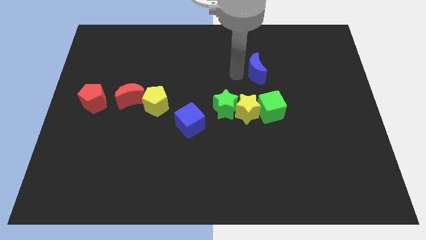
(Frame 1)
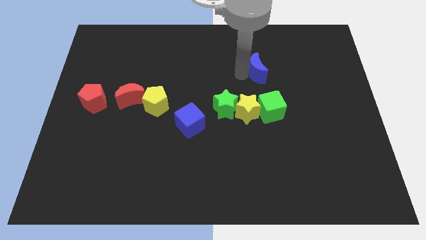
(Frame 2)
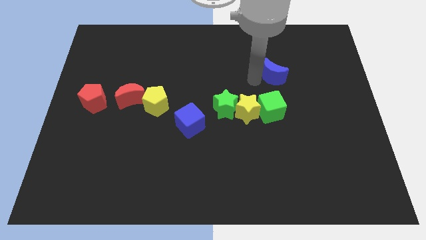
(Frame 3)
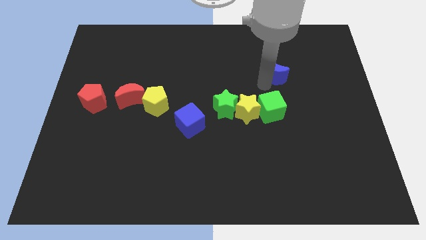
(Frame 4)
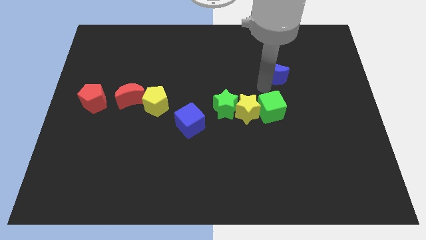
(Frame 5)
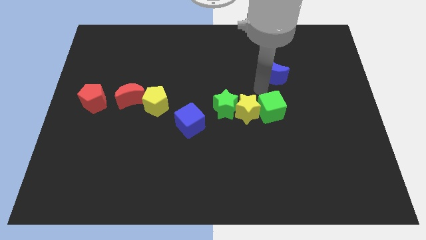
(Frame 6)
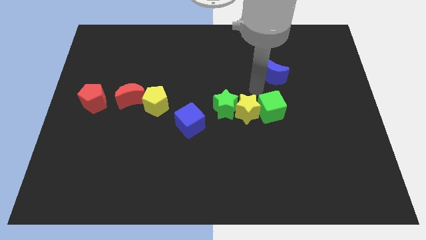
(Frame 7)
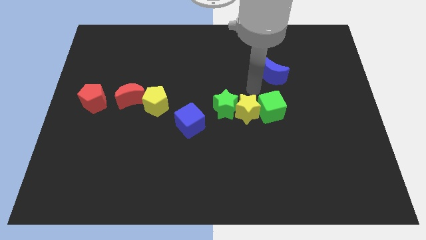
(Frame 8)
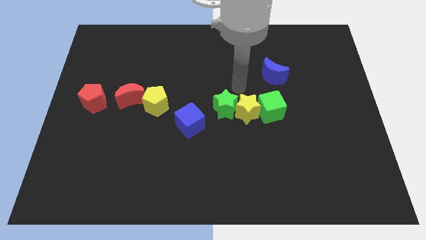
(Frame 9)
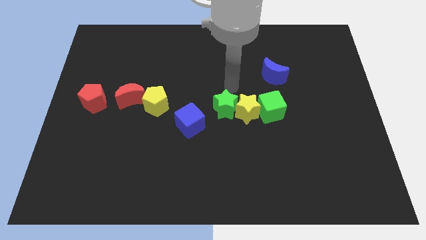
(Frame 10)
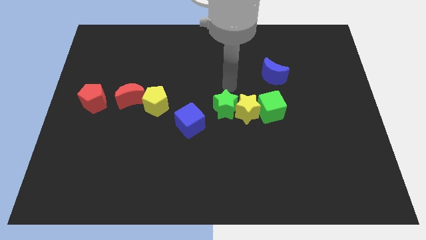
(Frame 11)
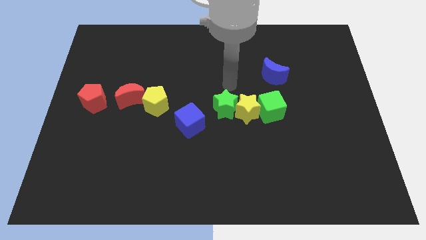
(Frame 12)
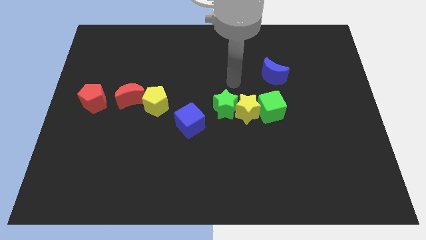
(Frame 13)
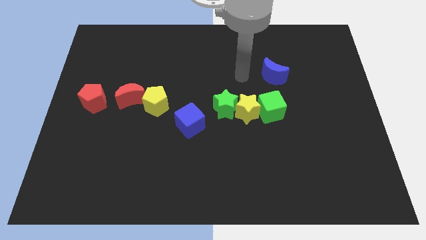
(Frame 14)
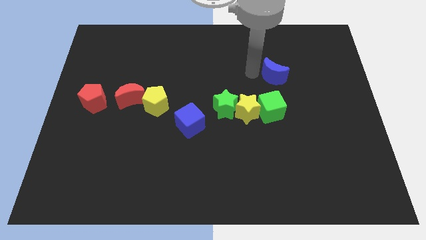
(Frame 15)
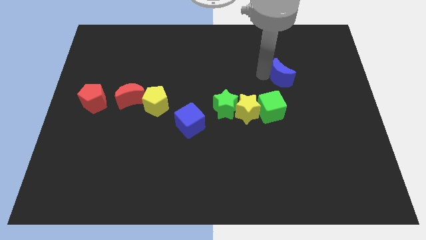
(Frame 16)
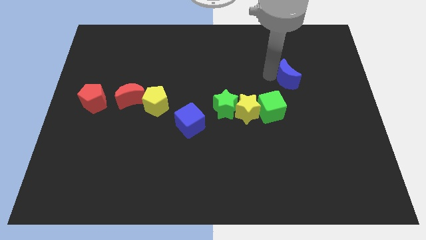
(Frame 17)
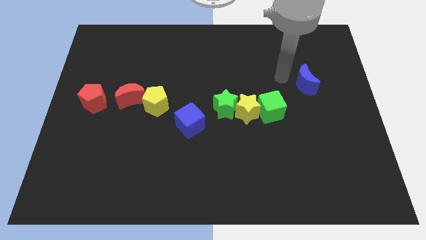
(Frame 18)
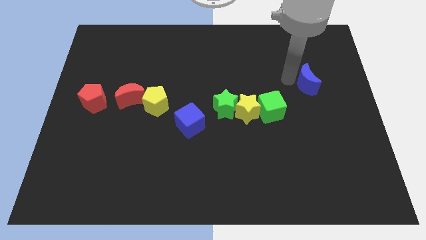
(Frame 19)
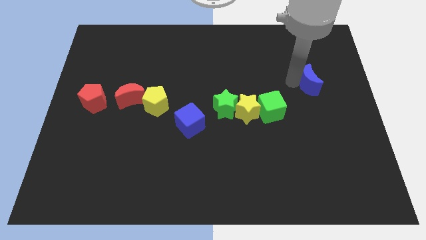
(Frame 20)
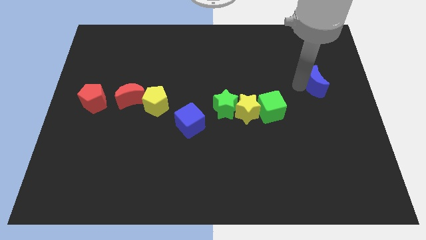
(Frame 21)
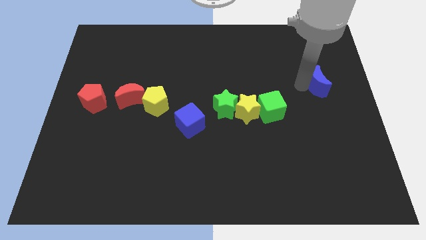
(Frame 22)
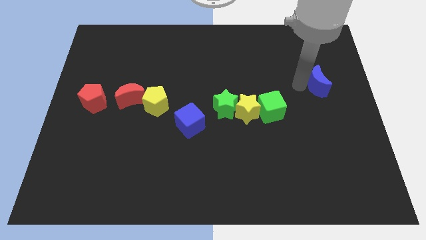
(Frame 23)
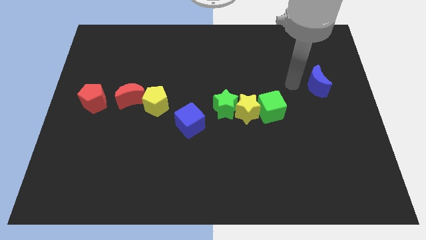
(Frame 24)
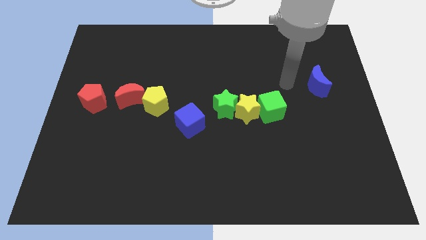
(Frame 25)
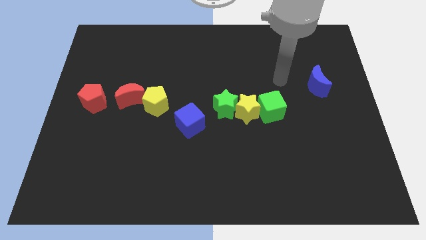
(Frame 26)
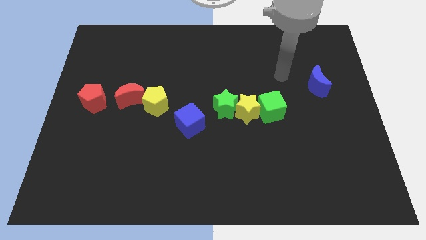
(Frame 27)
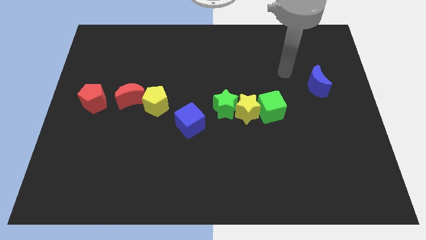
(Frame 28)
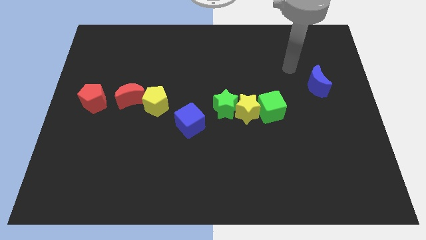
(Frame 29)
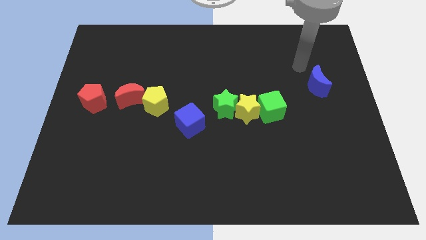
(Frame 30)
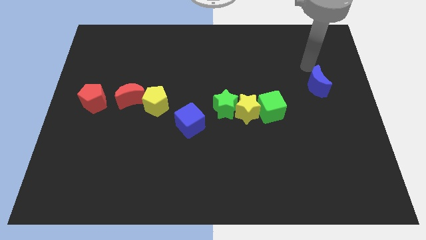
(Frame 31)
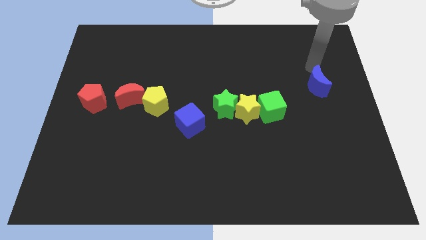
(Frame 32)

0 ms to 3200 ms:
push the blue crescent towards the center right side of the board

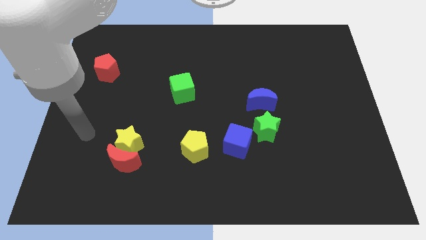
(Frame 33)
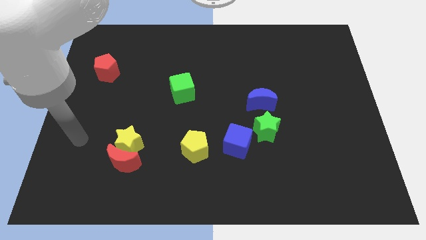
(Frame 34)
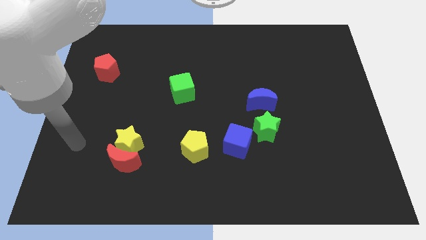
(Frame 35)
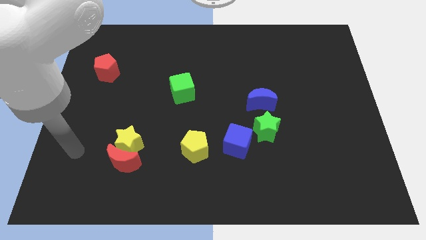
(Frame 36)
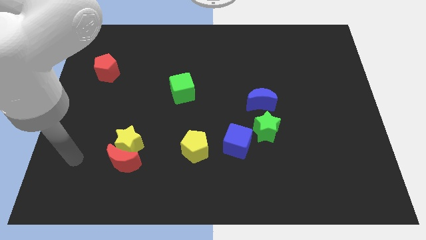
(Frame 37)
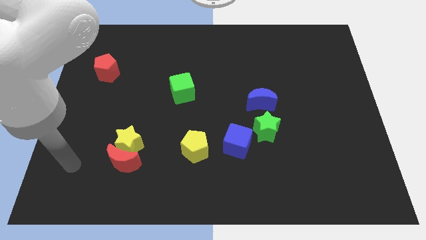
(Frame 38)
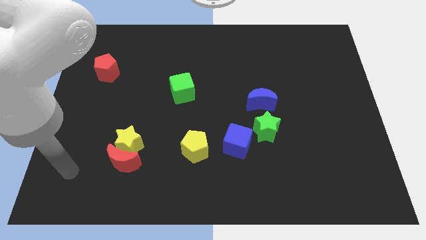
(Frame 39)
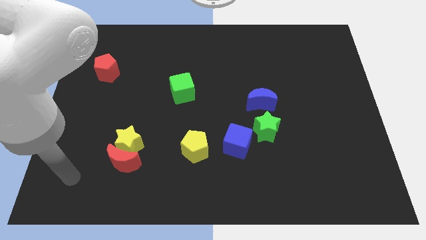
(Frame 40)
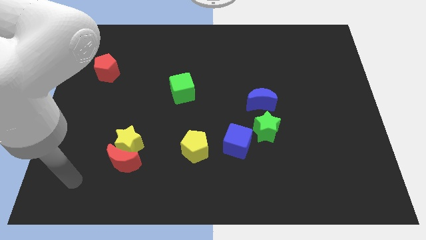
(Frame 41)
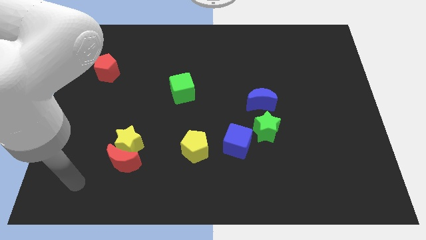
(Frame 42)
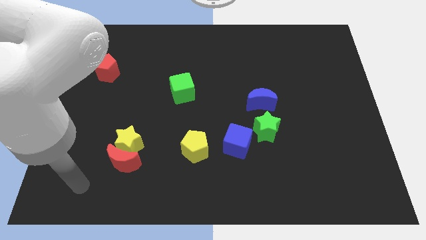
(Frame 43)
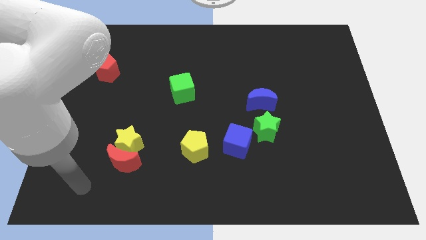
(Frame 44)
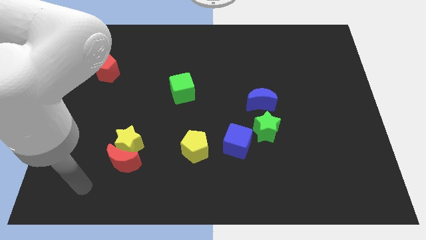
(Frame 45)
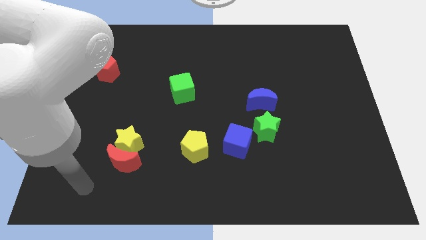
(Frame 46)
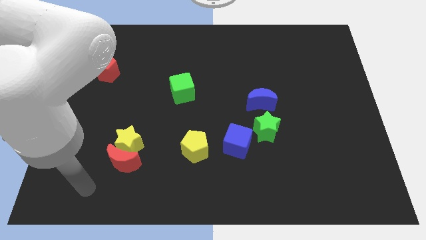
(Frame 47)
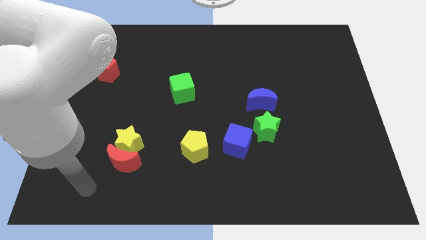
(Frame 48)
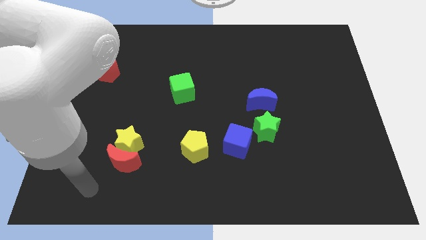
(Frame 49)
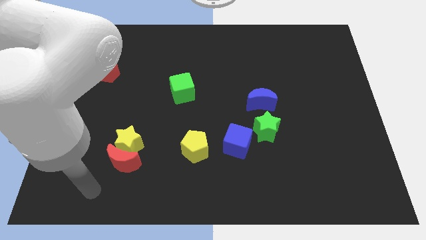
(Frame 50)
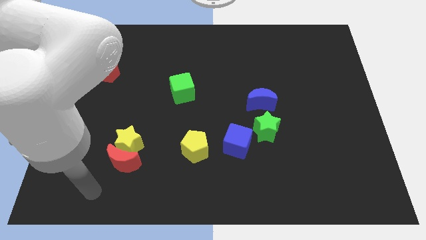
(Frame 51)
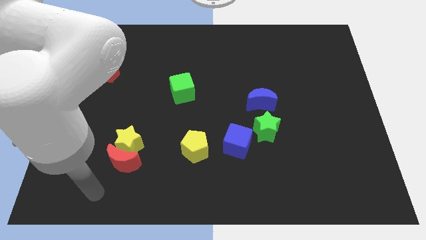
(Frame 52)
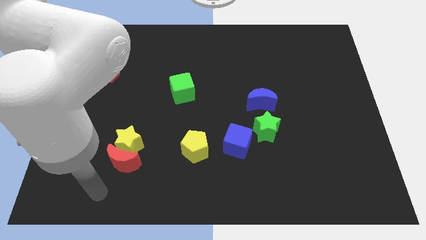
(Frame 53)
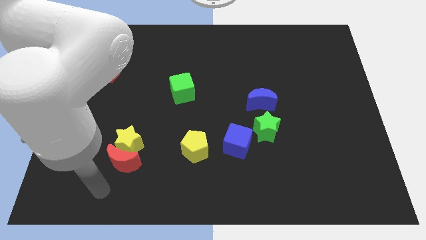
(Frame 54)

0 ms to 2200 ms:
move the arm towards the red crescent

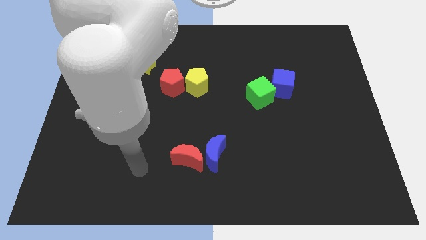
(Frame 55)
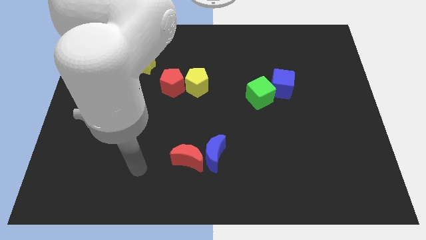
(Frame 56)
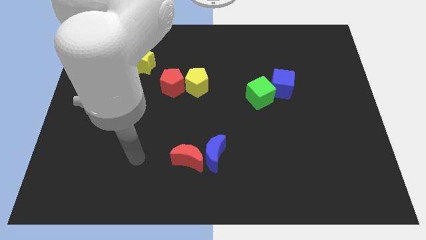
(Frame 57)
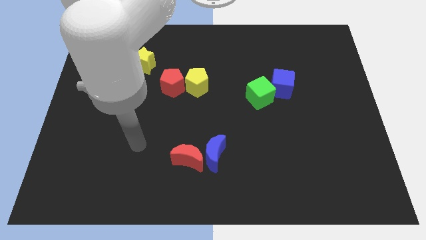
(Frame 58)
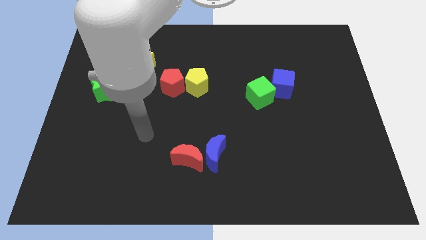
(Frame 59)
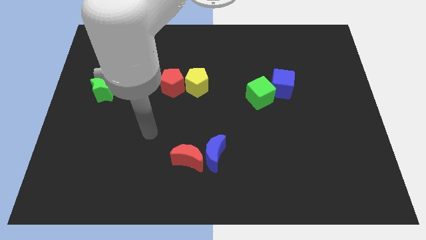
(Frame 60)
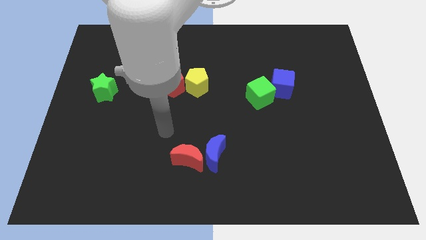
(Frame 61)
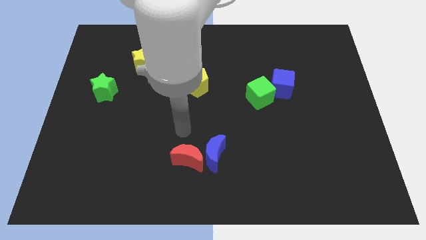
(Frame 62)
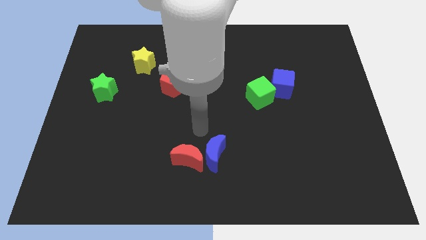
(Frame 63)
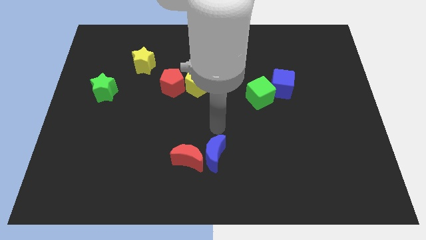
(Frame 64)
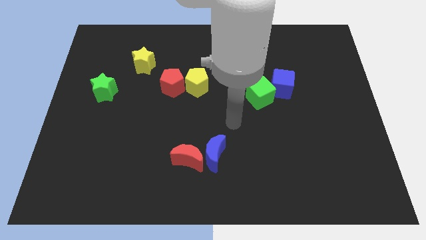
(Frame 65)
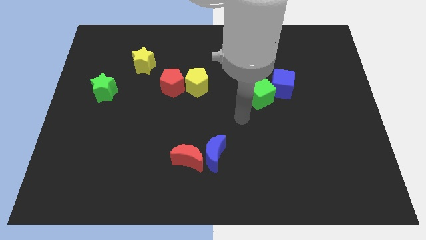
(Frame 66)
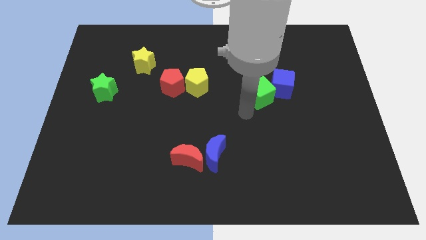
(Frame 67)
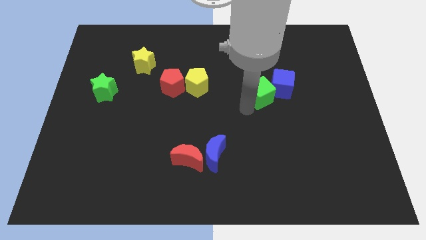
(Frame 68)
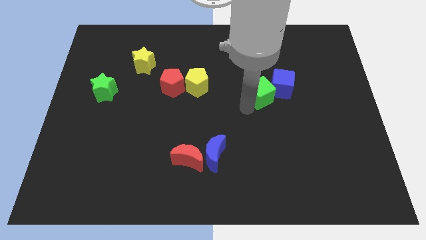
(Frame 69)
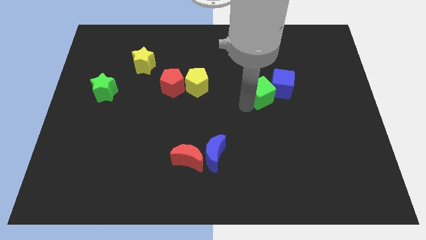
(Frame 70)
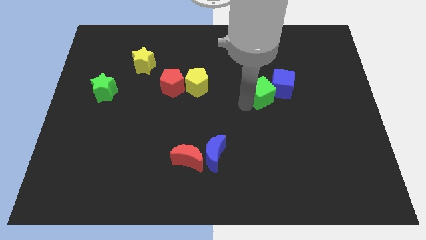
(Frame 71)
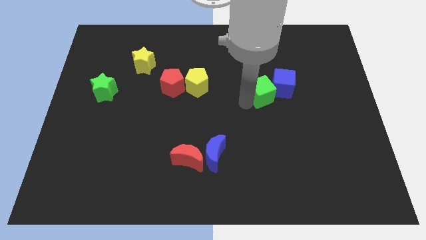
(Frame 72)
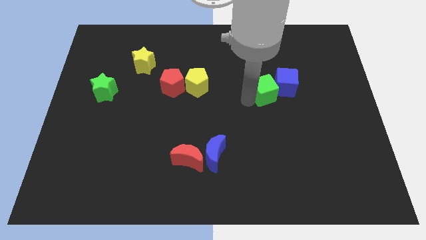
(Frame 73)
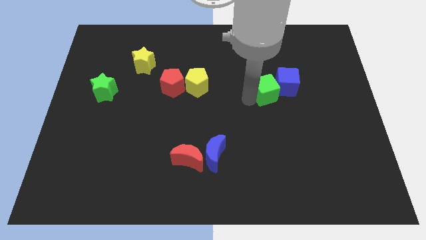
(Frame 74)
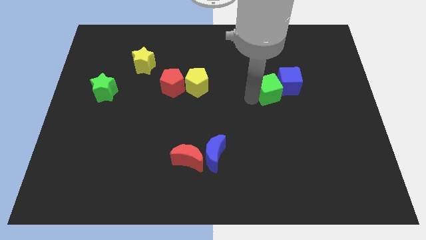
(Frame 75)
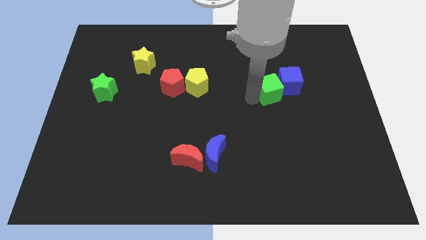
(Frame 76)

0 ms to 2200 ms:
push the green cube slightly to the right

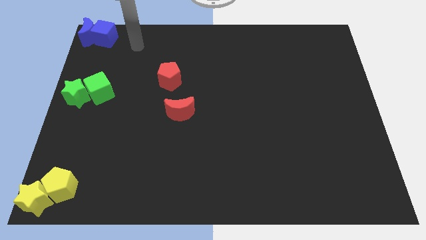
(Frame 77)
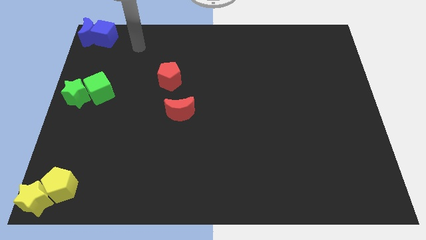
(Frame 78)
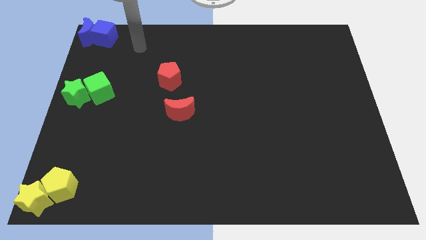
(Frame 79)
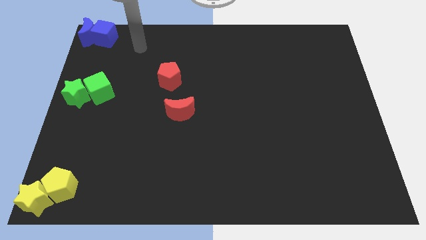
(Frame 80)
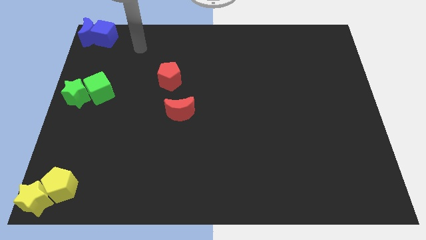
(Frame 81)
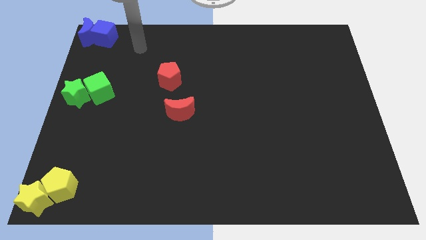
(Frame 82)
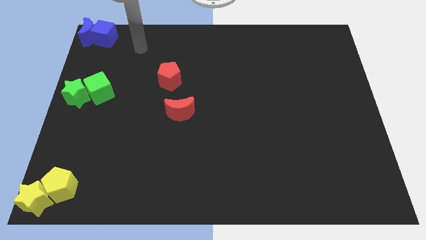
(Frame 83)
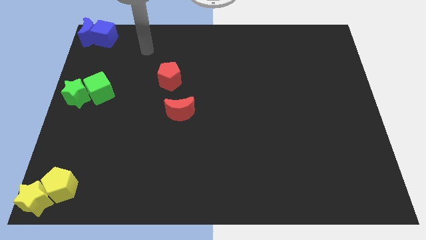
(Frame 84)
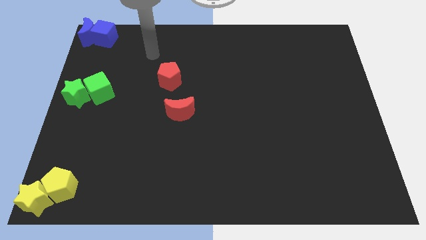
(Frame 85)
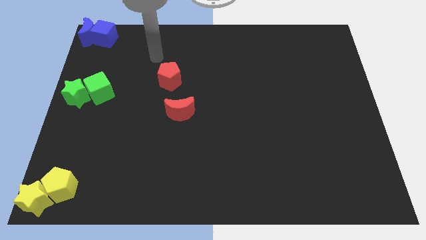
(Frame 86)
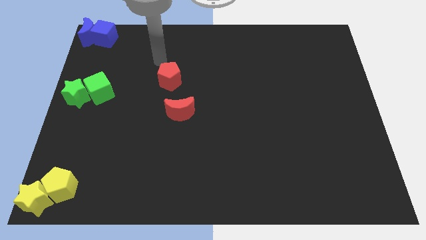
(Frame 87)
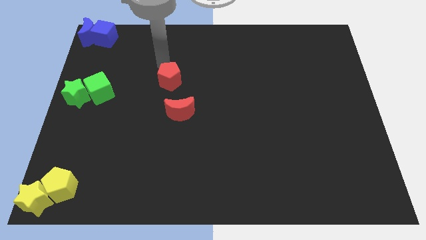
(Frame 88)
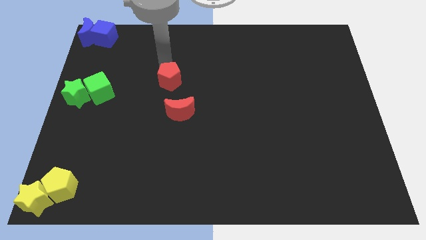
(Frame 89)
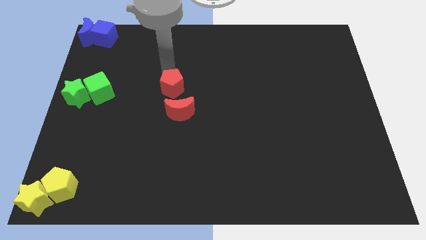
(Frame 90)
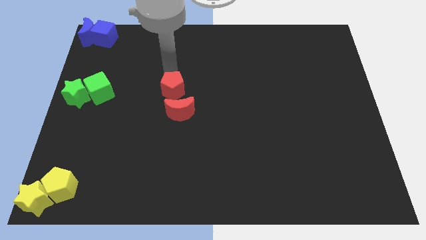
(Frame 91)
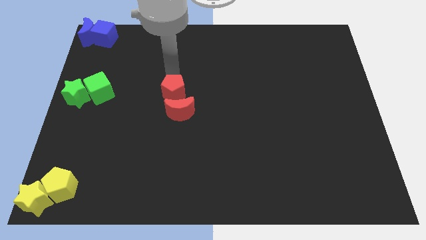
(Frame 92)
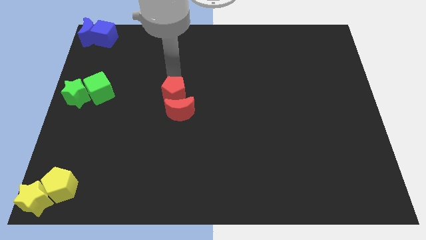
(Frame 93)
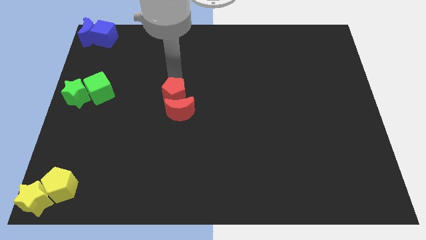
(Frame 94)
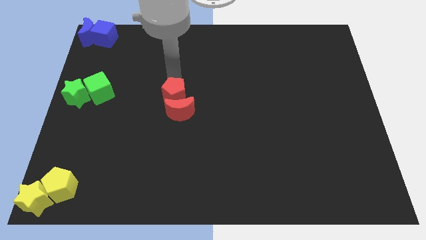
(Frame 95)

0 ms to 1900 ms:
push the red pentagon towards the red moon
